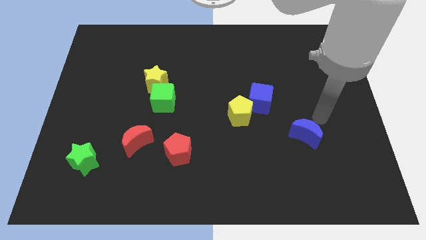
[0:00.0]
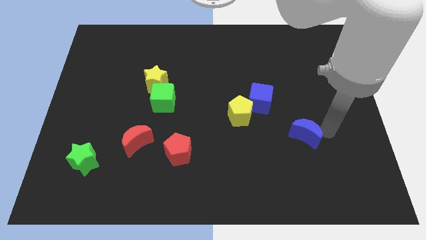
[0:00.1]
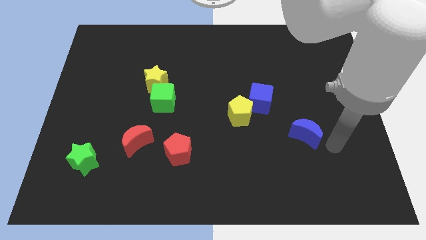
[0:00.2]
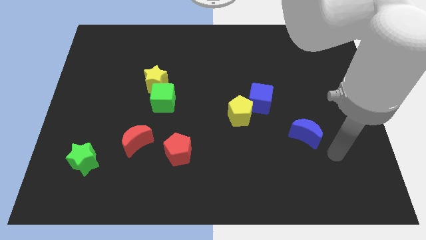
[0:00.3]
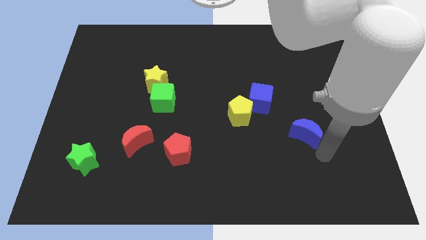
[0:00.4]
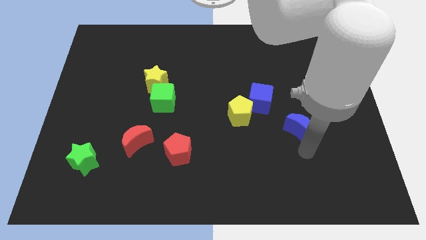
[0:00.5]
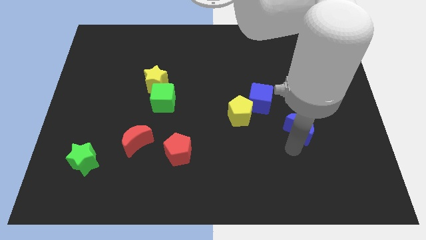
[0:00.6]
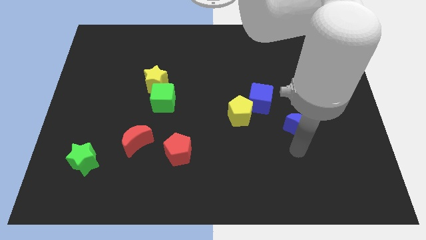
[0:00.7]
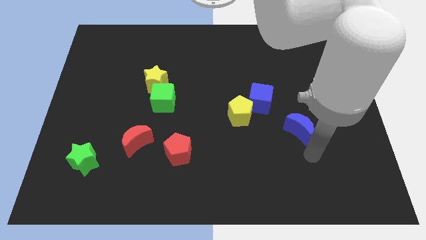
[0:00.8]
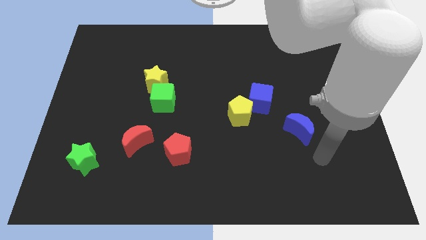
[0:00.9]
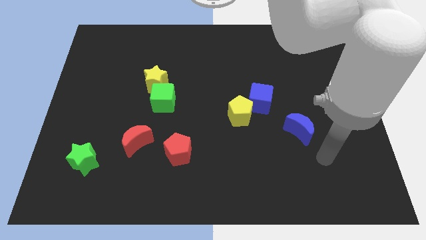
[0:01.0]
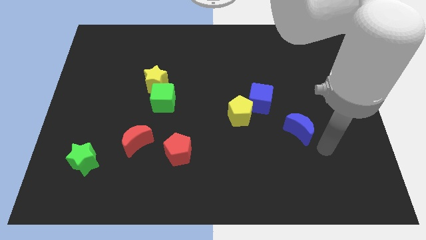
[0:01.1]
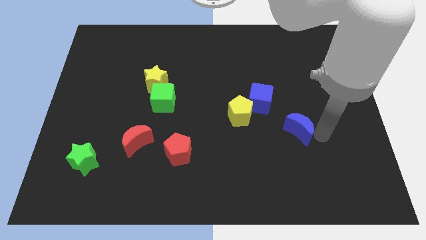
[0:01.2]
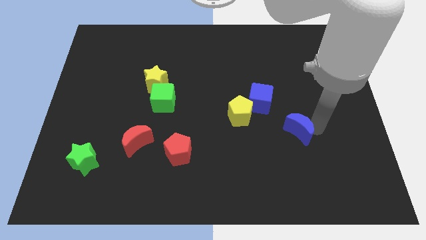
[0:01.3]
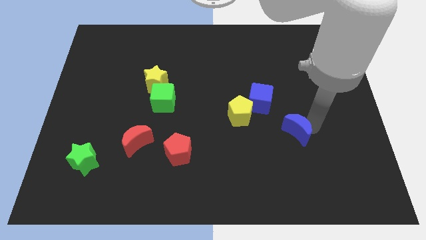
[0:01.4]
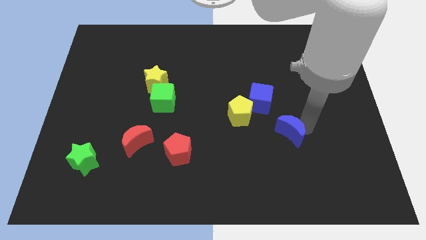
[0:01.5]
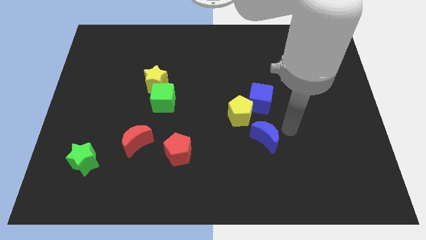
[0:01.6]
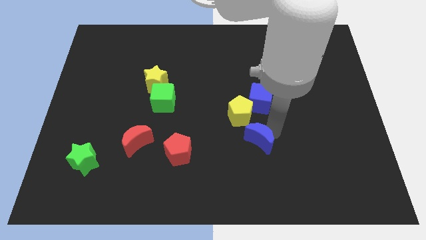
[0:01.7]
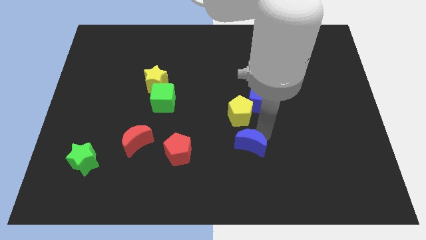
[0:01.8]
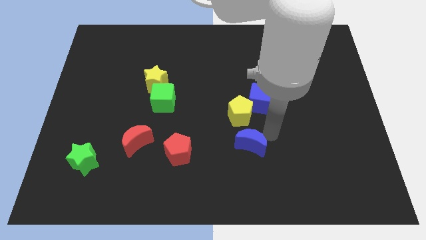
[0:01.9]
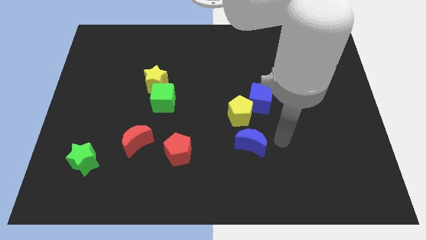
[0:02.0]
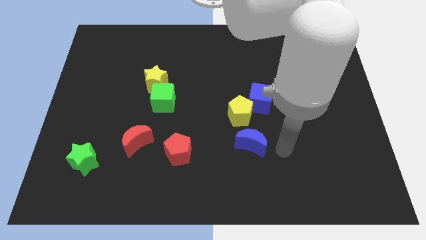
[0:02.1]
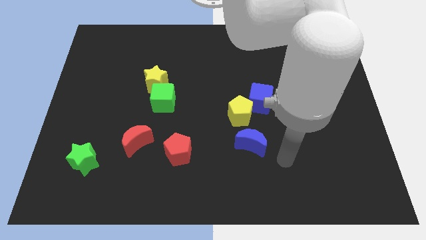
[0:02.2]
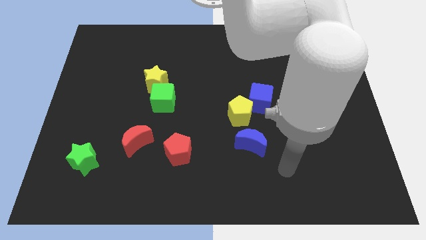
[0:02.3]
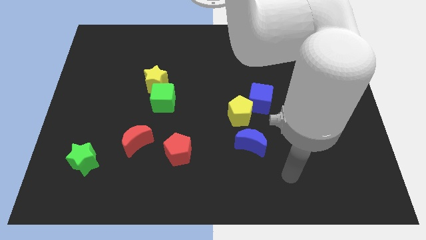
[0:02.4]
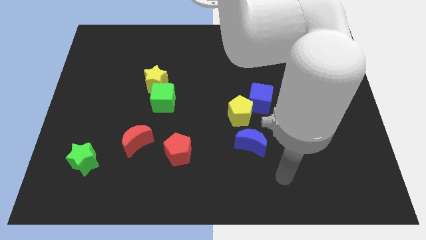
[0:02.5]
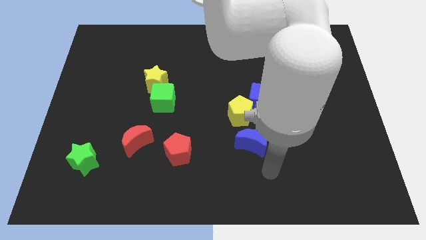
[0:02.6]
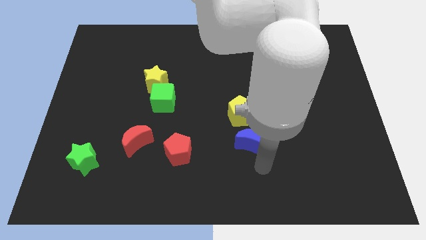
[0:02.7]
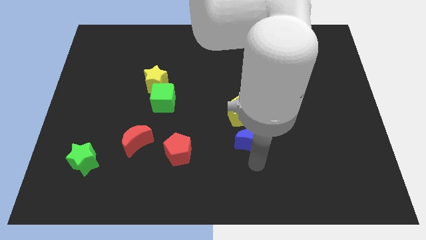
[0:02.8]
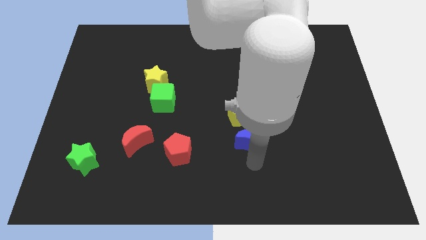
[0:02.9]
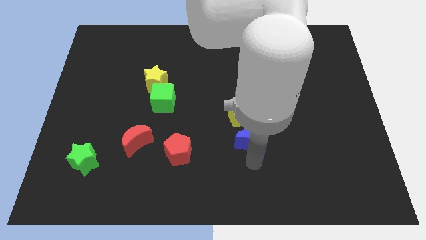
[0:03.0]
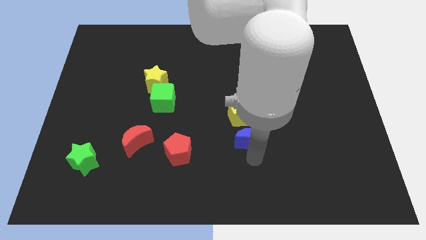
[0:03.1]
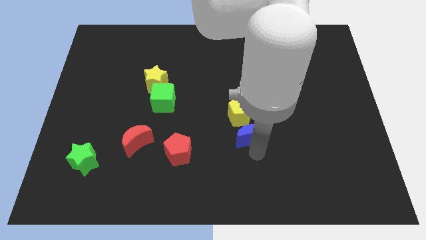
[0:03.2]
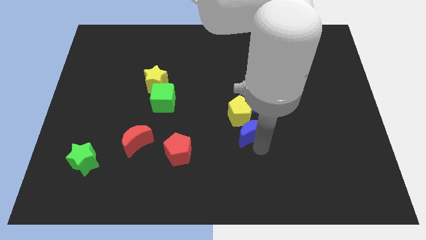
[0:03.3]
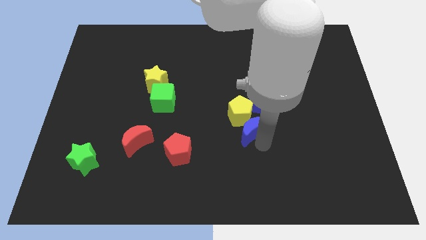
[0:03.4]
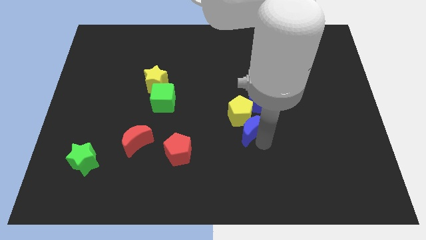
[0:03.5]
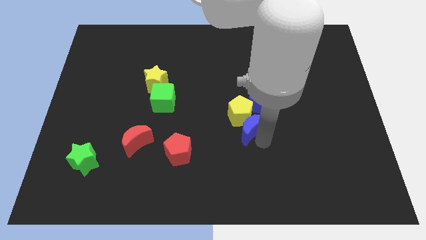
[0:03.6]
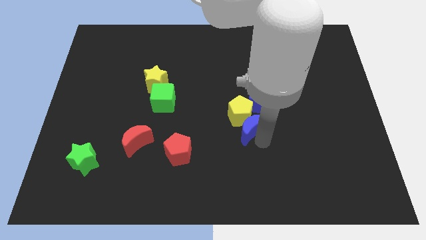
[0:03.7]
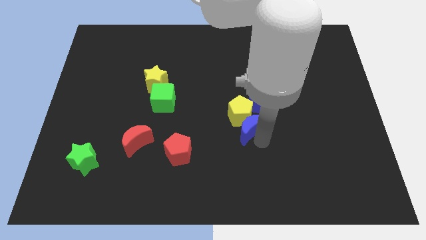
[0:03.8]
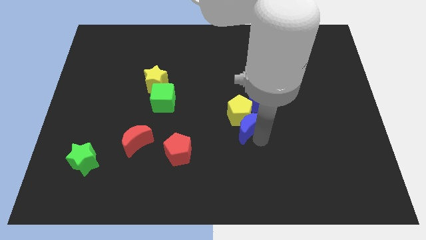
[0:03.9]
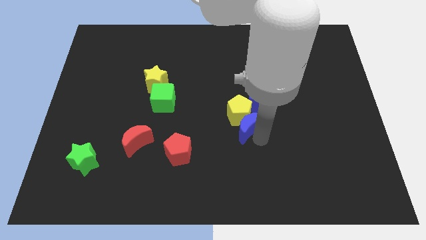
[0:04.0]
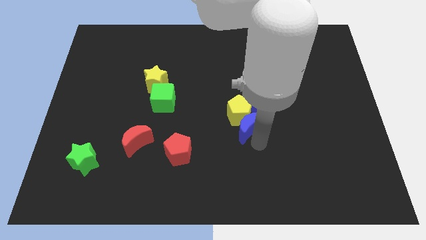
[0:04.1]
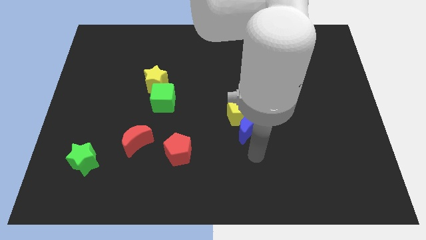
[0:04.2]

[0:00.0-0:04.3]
slide the blue moon into the yellow pentagon

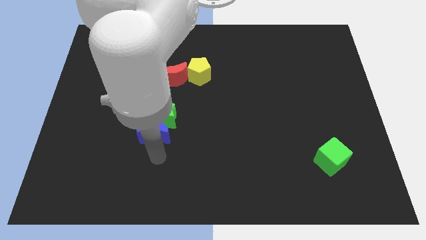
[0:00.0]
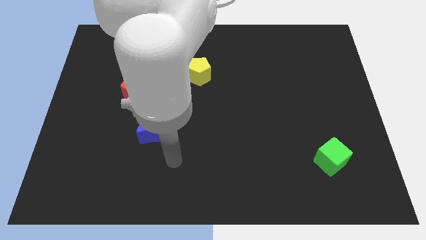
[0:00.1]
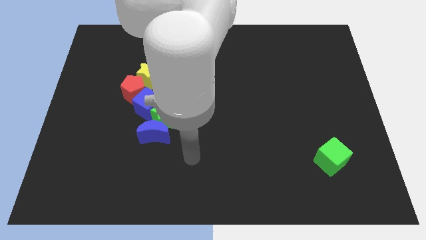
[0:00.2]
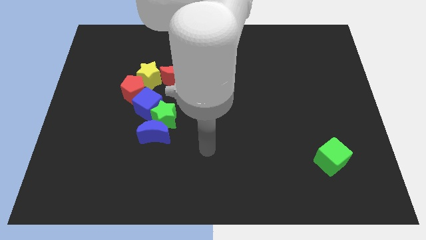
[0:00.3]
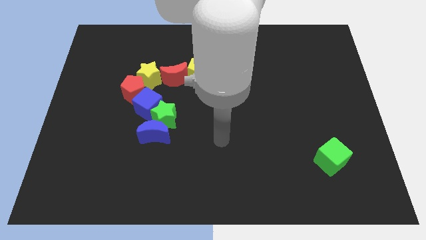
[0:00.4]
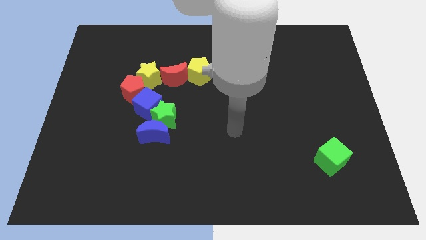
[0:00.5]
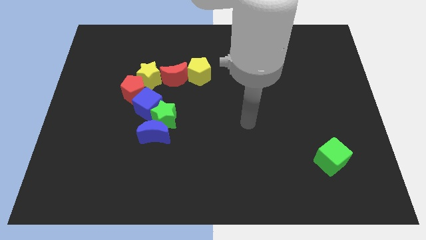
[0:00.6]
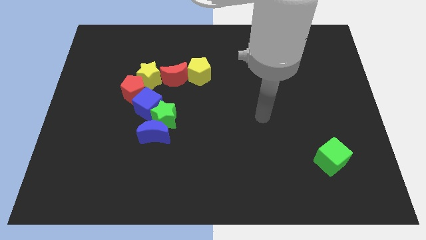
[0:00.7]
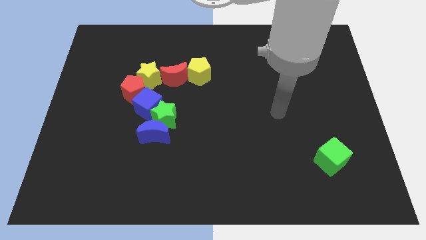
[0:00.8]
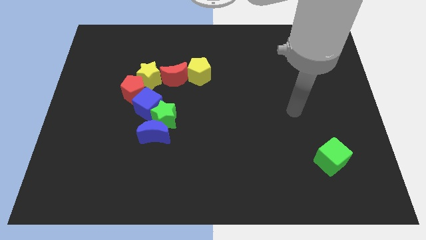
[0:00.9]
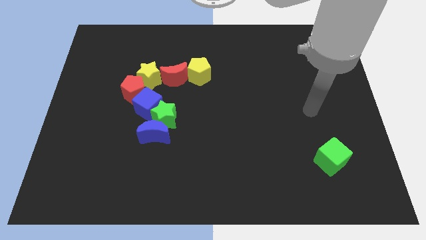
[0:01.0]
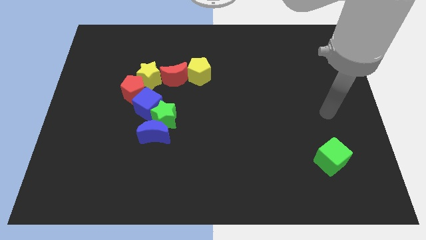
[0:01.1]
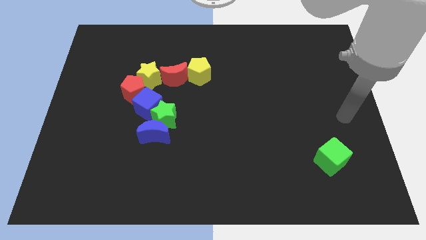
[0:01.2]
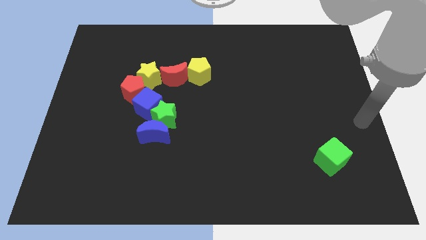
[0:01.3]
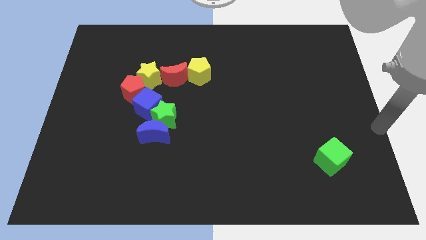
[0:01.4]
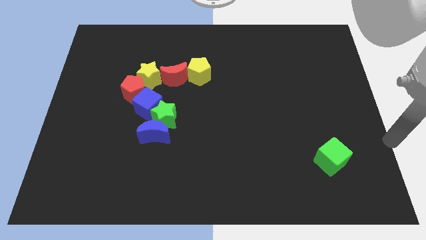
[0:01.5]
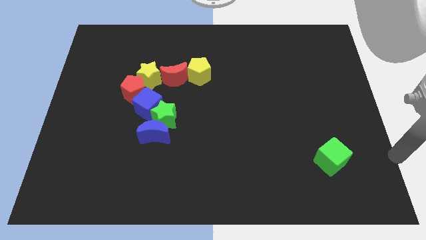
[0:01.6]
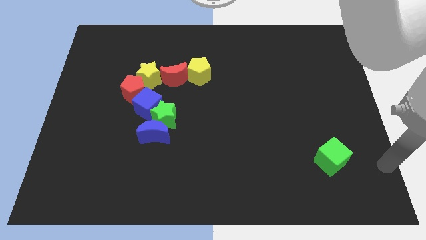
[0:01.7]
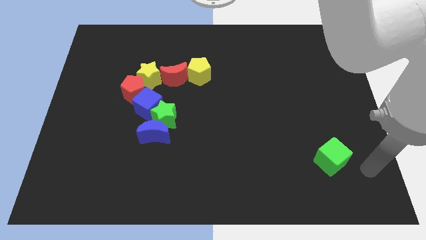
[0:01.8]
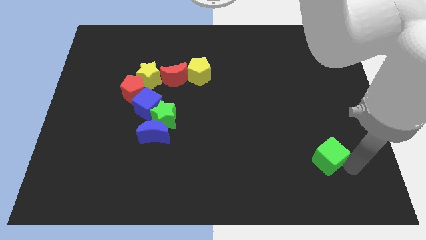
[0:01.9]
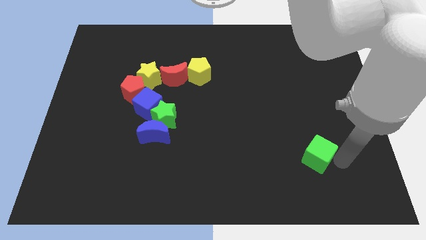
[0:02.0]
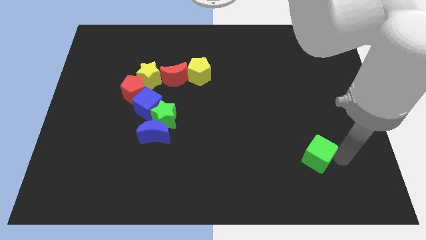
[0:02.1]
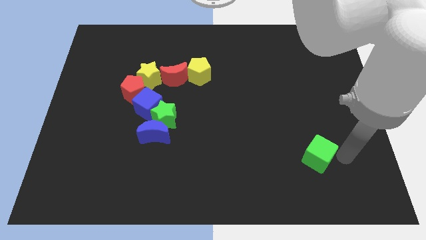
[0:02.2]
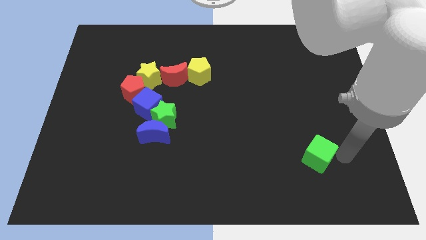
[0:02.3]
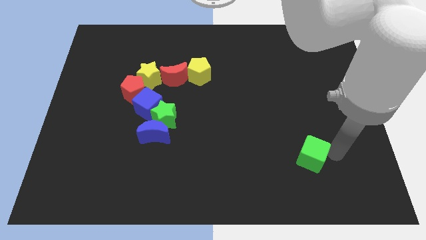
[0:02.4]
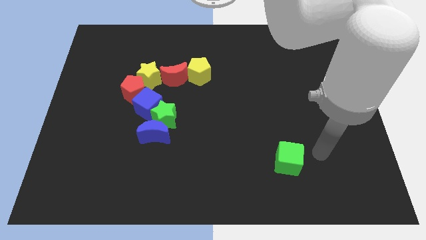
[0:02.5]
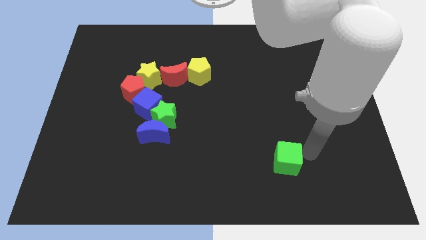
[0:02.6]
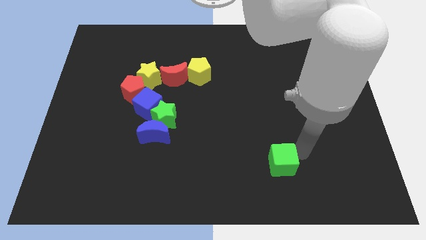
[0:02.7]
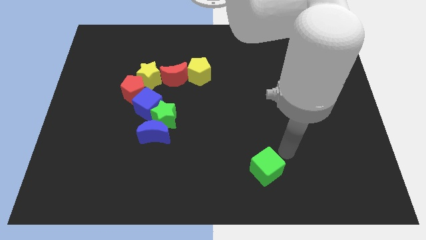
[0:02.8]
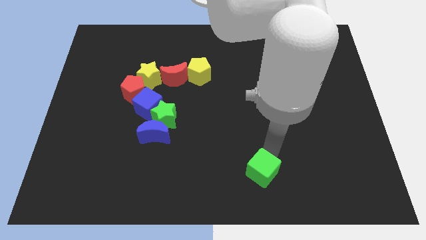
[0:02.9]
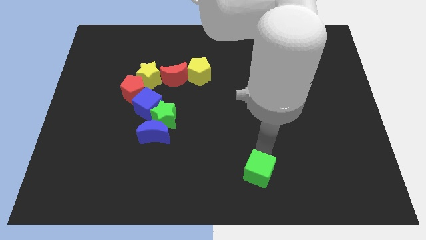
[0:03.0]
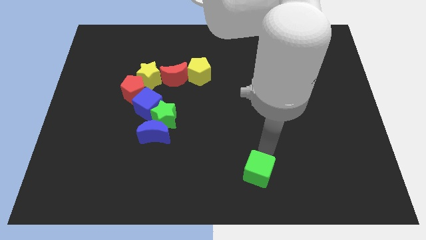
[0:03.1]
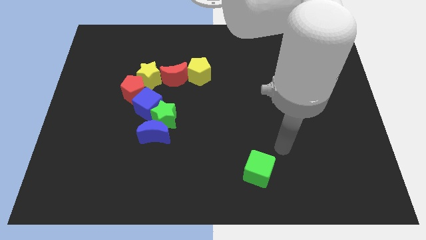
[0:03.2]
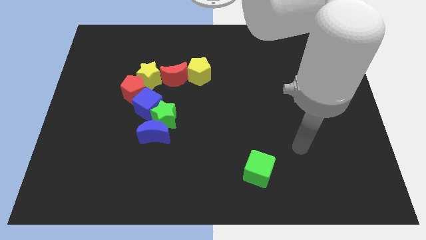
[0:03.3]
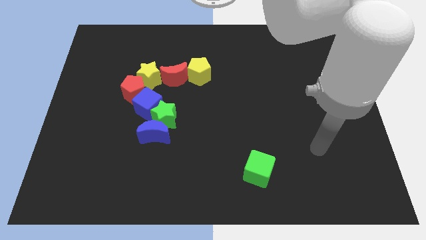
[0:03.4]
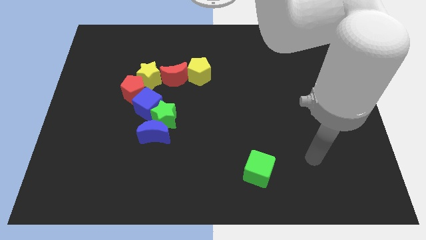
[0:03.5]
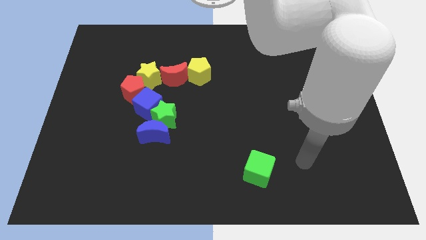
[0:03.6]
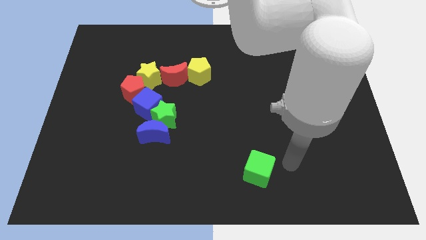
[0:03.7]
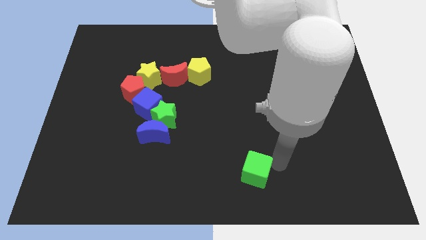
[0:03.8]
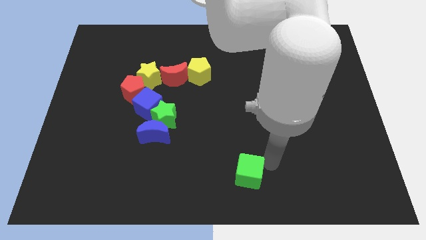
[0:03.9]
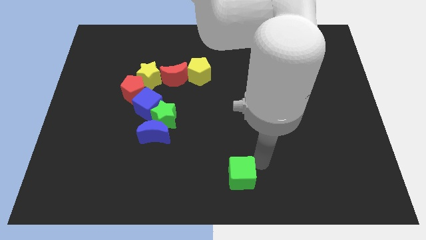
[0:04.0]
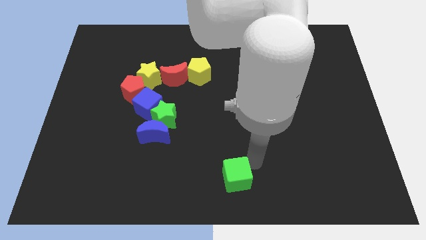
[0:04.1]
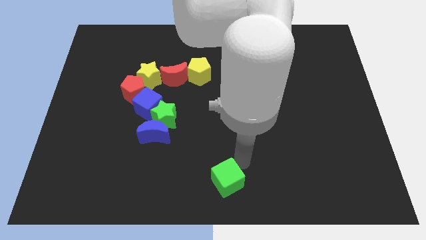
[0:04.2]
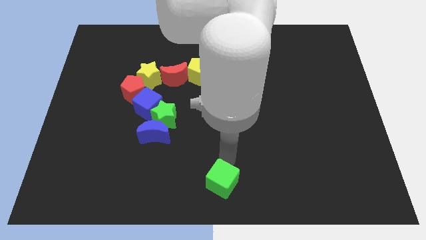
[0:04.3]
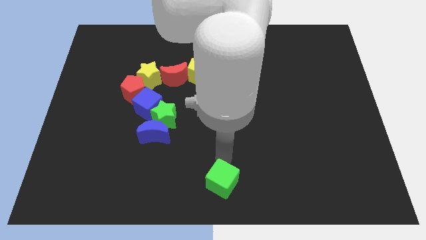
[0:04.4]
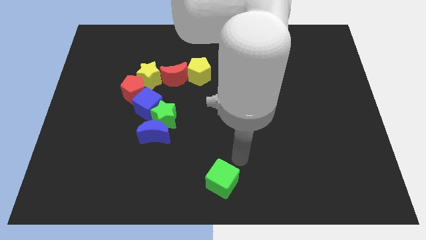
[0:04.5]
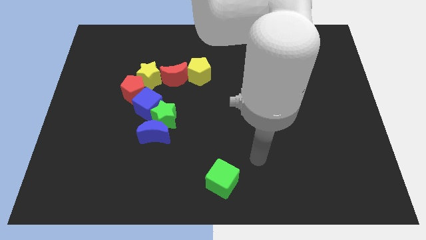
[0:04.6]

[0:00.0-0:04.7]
move the green cube to the bottom right of the blue crescent

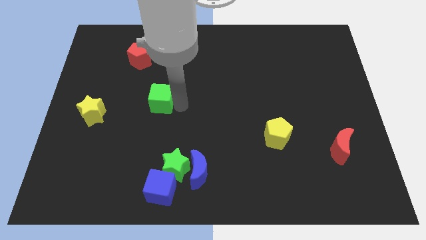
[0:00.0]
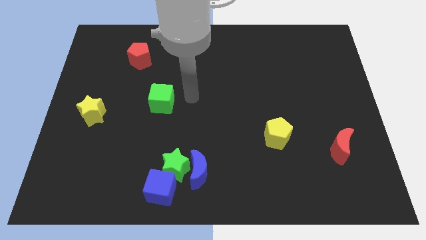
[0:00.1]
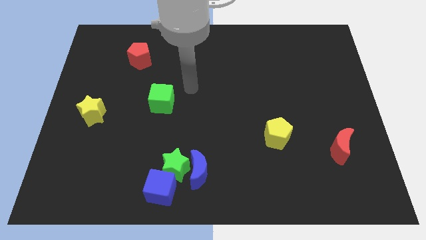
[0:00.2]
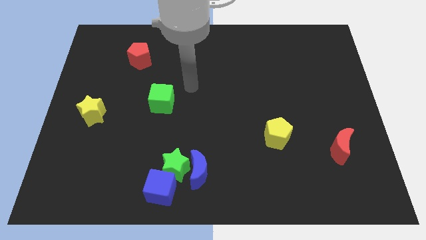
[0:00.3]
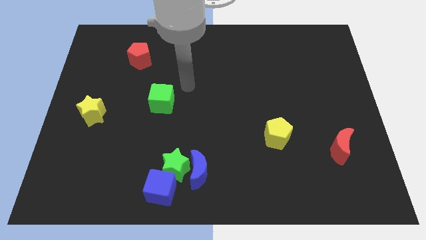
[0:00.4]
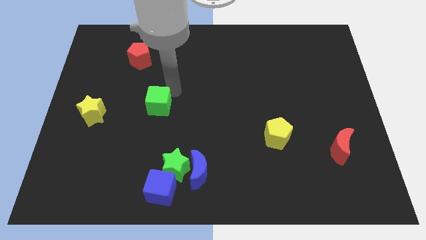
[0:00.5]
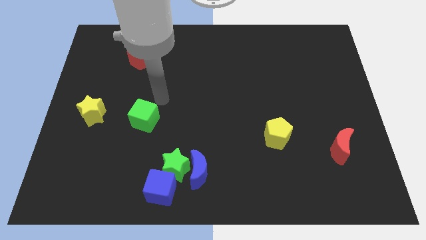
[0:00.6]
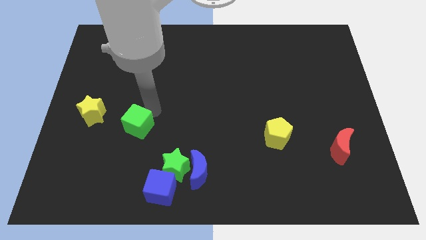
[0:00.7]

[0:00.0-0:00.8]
move the green cube towards the yellow pentagon
